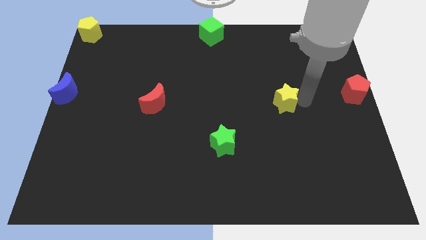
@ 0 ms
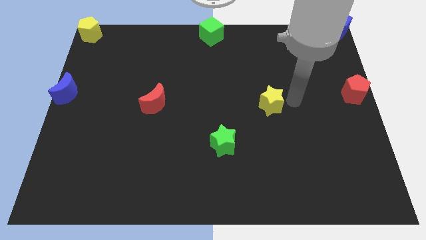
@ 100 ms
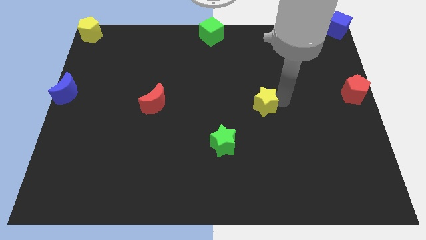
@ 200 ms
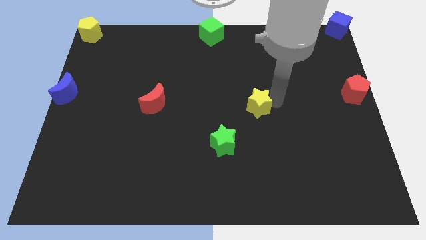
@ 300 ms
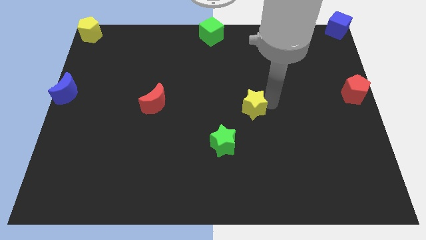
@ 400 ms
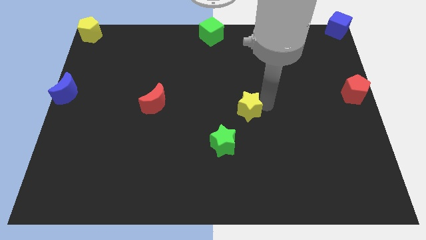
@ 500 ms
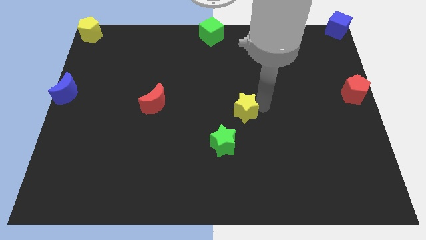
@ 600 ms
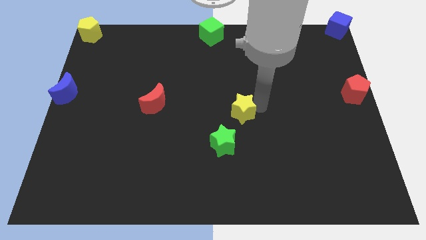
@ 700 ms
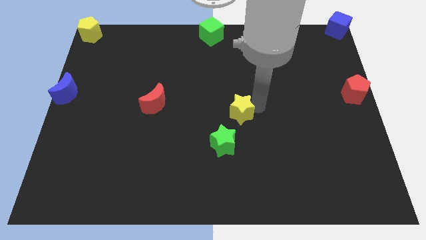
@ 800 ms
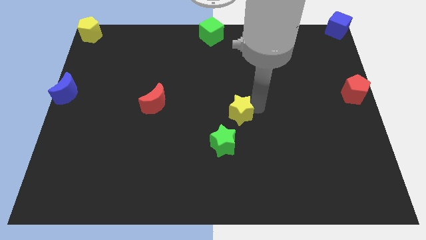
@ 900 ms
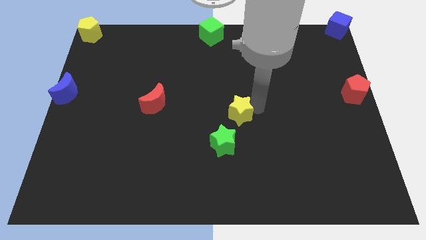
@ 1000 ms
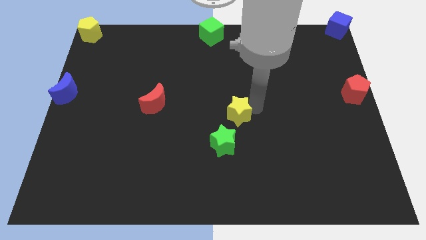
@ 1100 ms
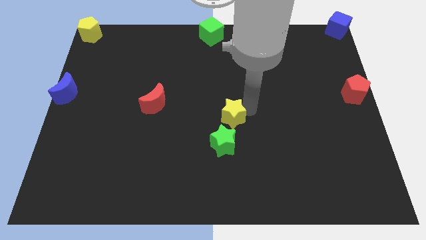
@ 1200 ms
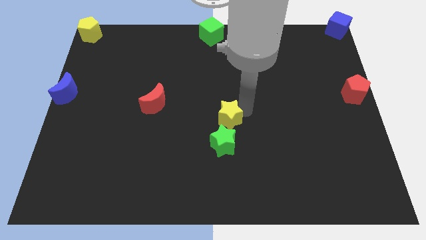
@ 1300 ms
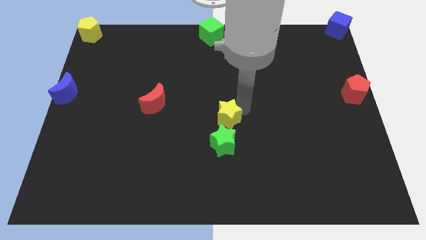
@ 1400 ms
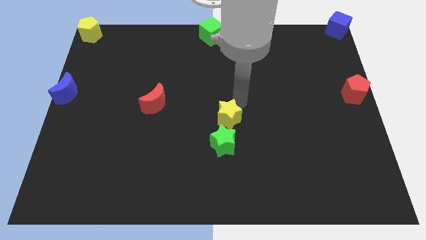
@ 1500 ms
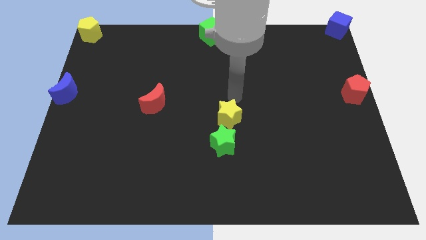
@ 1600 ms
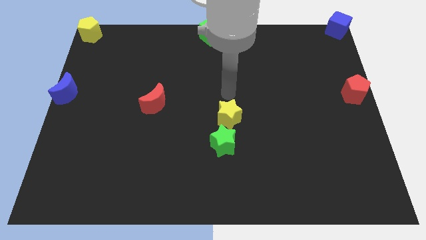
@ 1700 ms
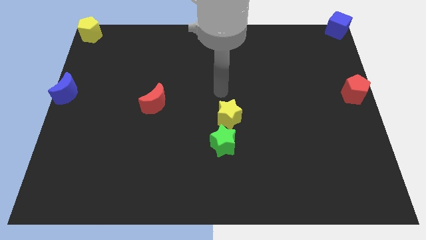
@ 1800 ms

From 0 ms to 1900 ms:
push the yellow star to the top right side of the green star

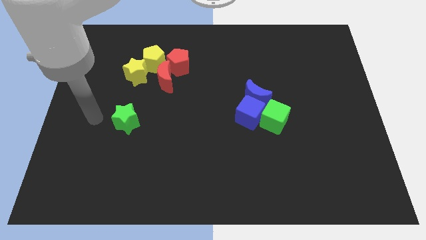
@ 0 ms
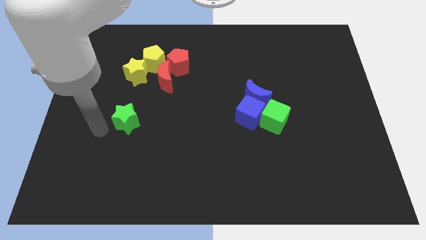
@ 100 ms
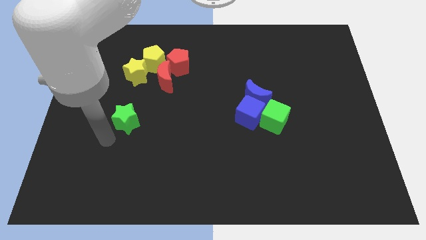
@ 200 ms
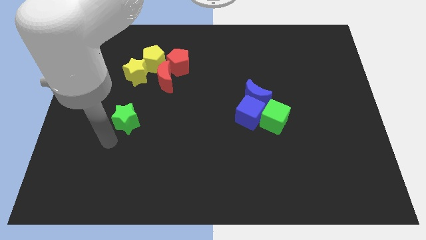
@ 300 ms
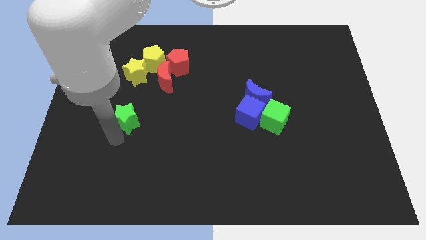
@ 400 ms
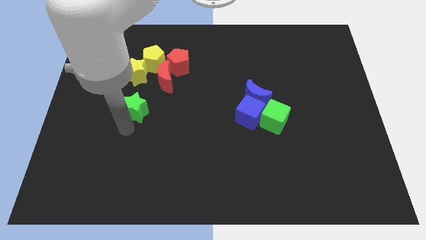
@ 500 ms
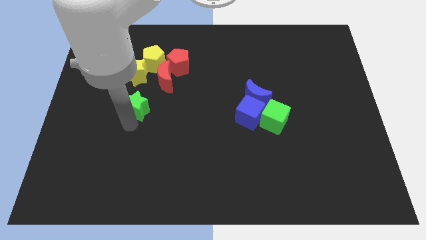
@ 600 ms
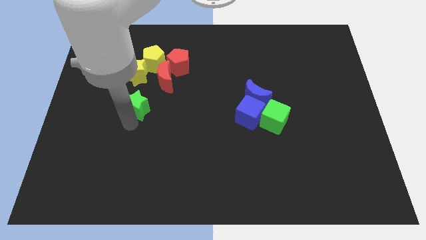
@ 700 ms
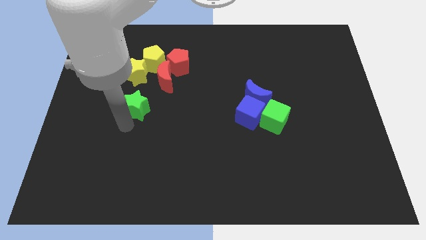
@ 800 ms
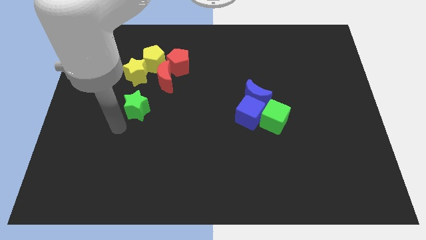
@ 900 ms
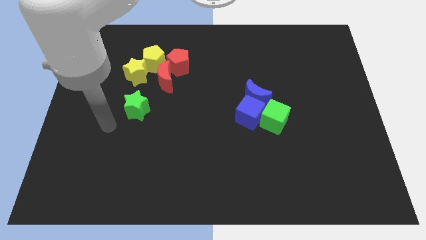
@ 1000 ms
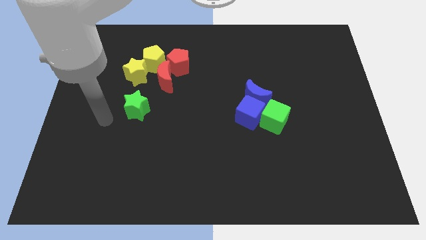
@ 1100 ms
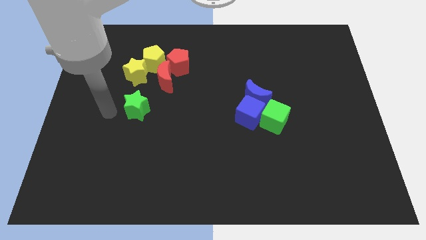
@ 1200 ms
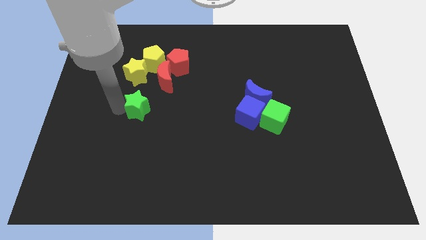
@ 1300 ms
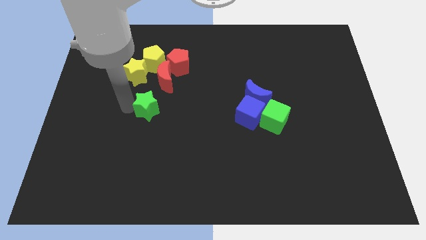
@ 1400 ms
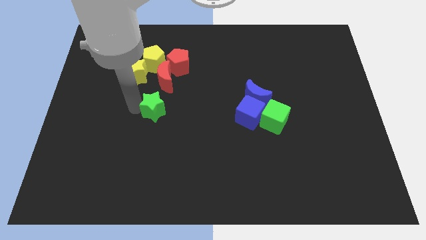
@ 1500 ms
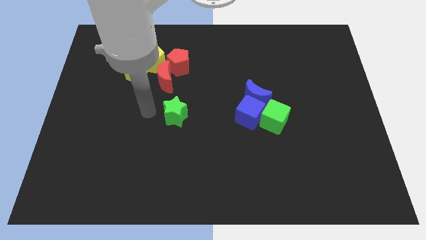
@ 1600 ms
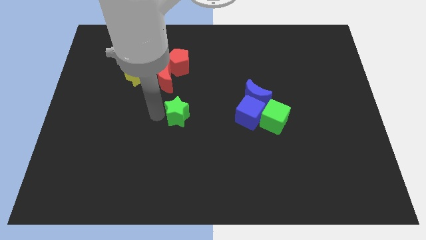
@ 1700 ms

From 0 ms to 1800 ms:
move the green star towards the blue cube

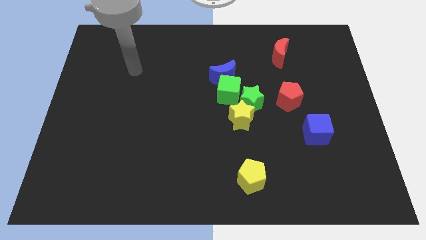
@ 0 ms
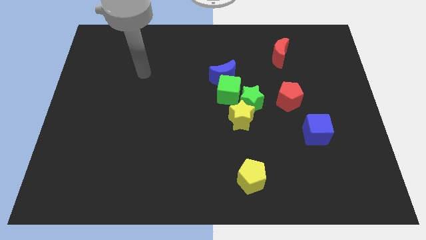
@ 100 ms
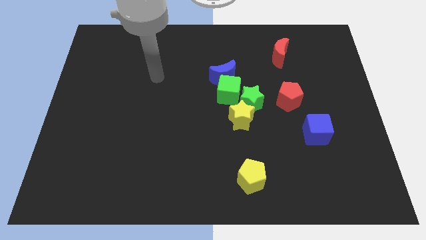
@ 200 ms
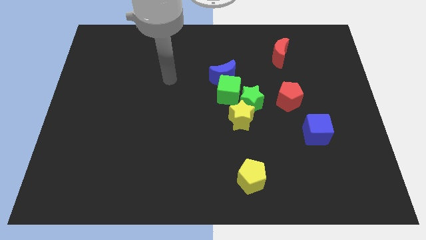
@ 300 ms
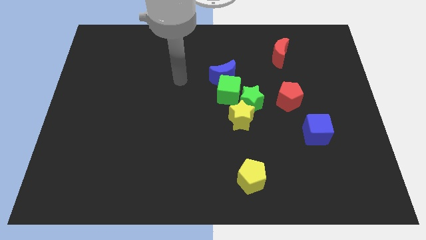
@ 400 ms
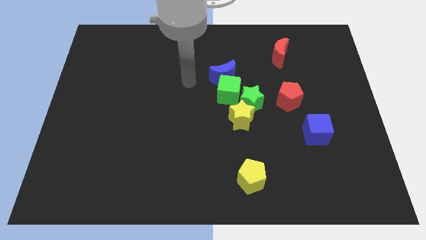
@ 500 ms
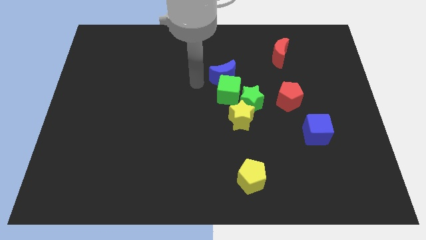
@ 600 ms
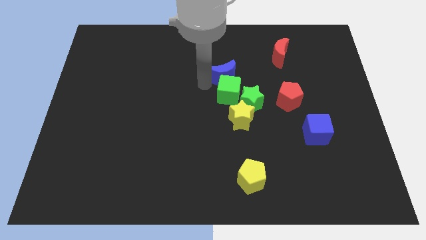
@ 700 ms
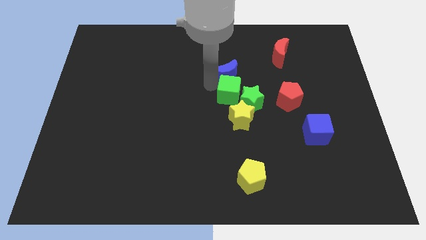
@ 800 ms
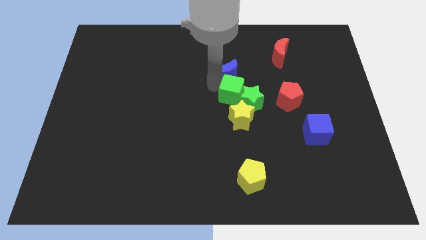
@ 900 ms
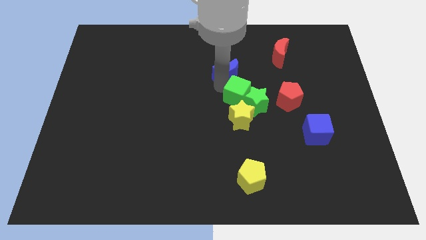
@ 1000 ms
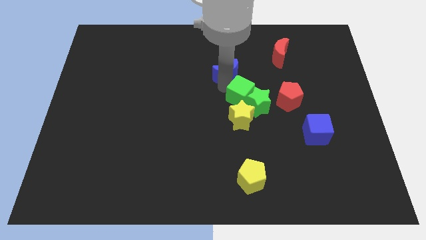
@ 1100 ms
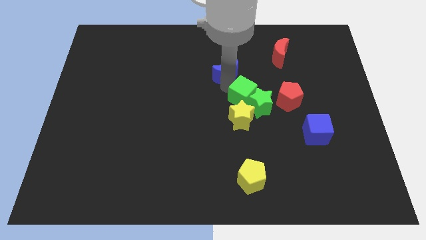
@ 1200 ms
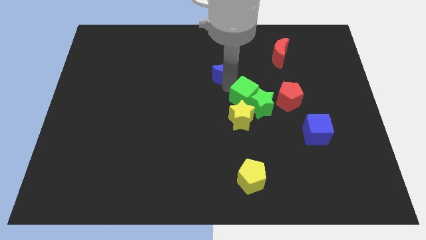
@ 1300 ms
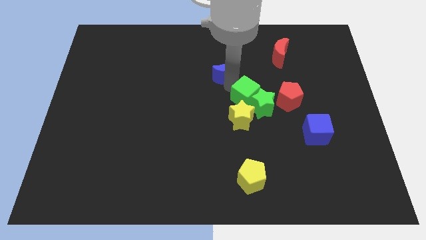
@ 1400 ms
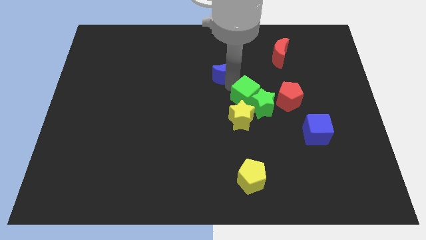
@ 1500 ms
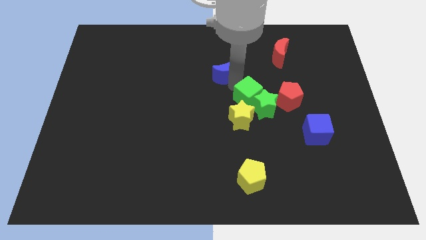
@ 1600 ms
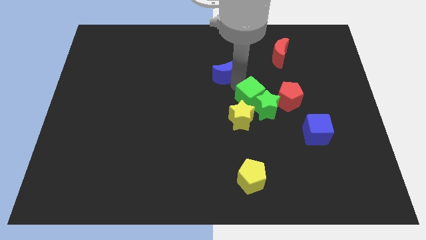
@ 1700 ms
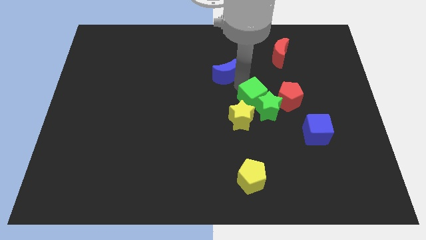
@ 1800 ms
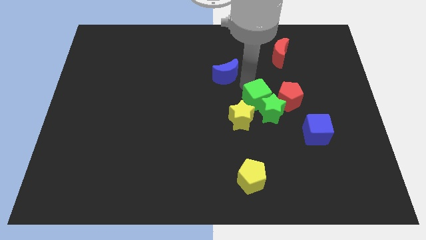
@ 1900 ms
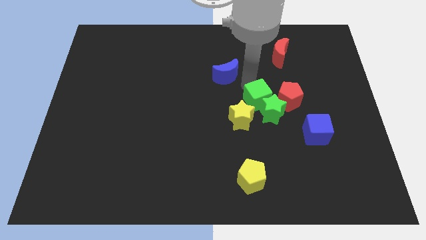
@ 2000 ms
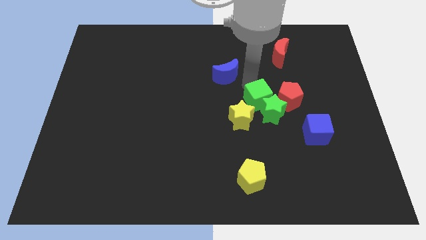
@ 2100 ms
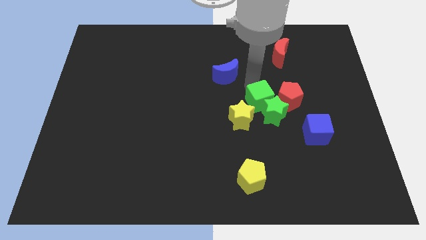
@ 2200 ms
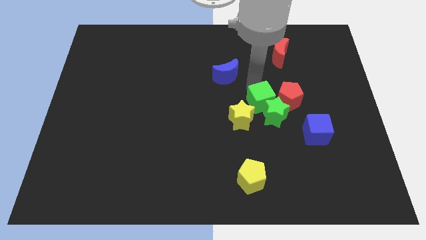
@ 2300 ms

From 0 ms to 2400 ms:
place green cube to the left of red pentagon

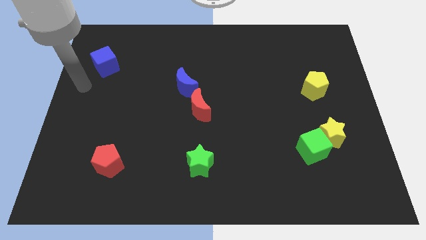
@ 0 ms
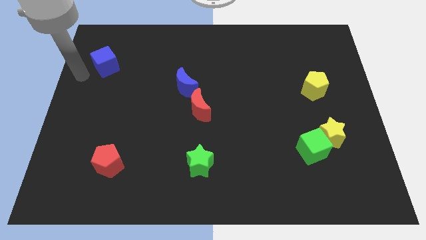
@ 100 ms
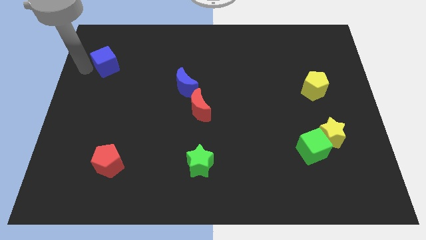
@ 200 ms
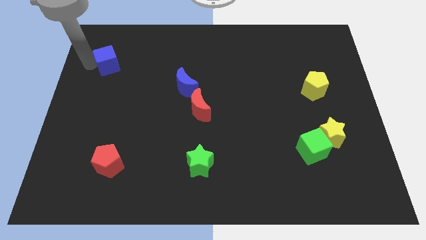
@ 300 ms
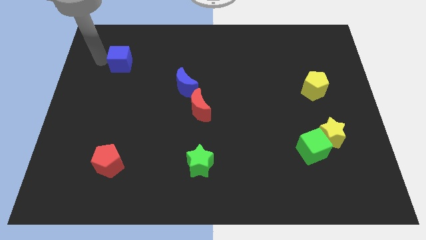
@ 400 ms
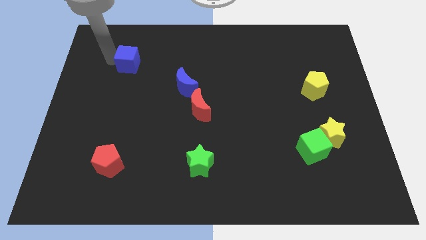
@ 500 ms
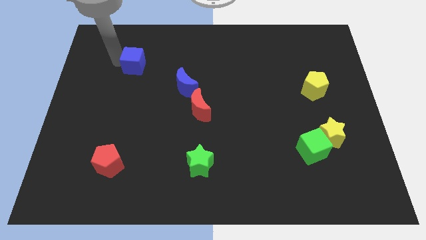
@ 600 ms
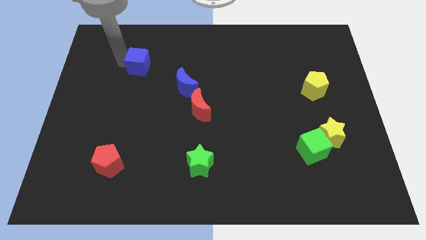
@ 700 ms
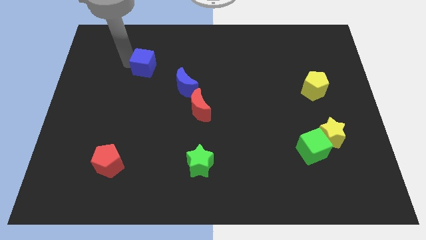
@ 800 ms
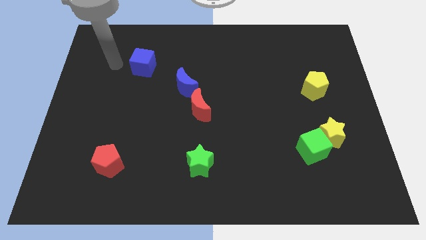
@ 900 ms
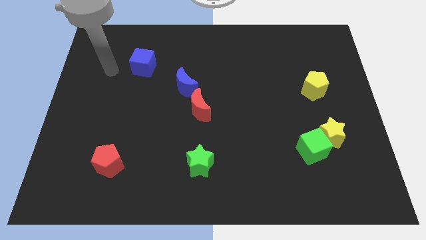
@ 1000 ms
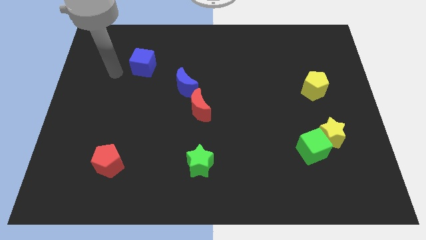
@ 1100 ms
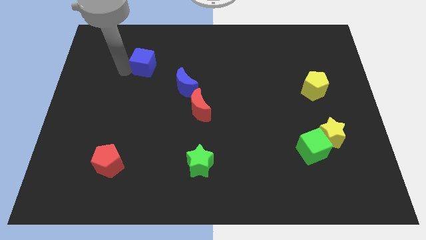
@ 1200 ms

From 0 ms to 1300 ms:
move blue cube towards blue moon

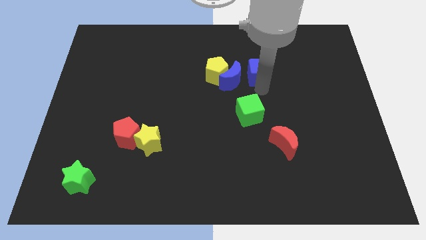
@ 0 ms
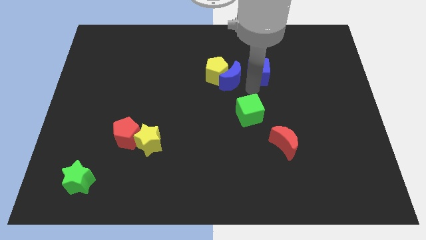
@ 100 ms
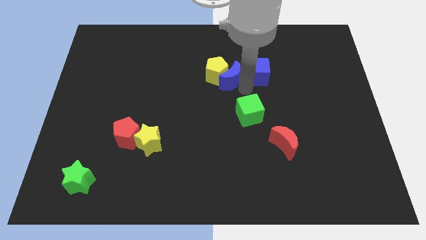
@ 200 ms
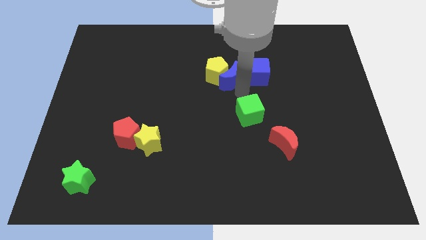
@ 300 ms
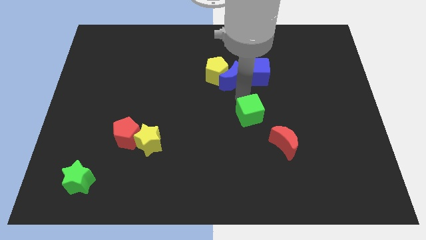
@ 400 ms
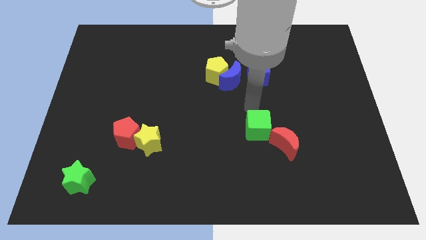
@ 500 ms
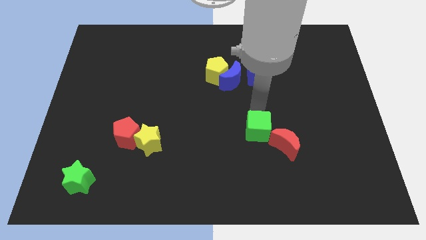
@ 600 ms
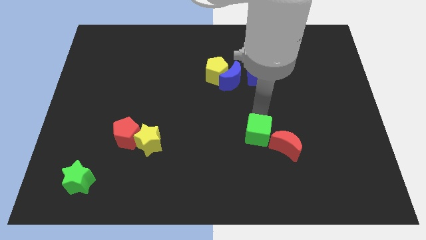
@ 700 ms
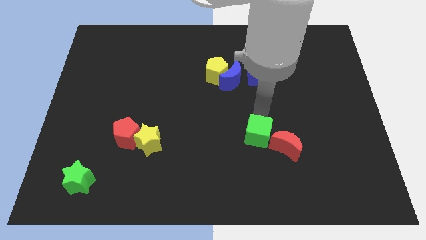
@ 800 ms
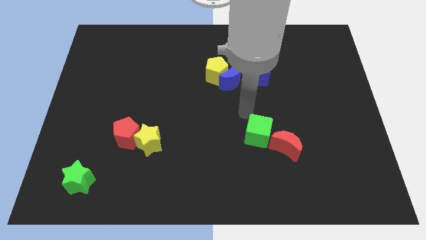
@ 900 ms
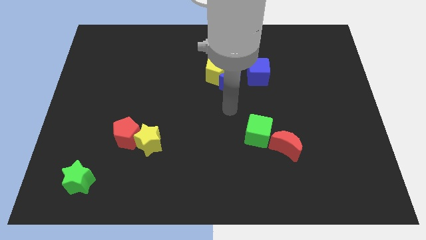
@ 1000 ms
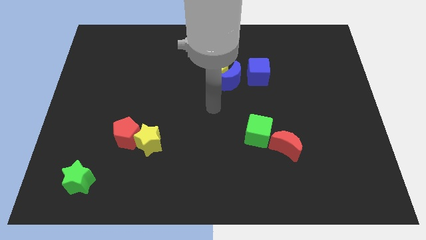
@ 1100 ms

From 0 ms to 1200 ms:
place the green cube towards the bottom side of the board

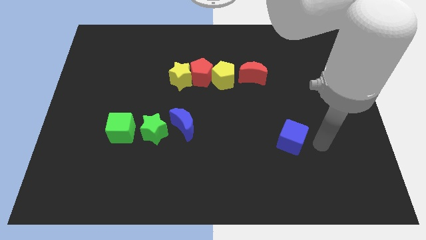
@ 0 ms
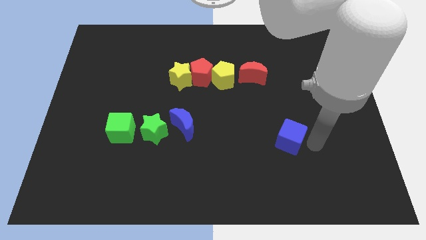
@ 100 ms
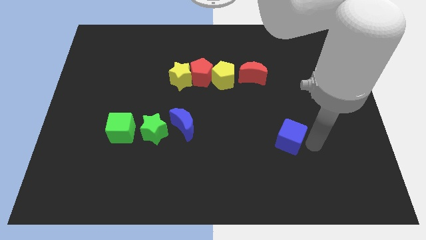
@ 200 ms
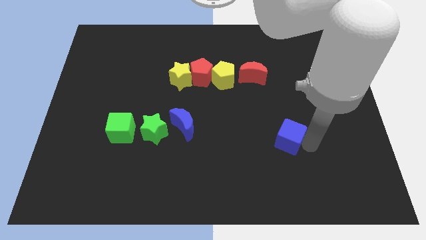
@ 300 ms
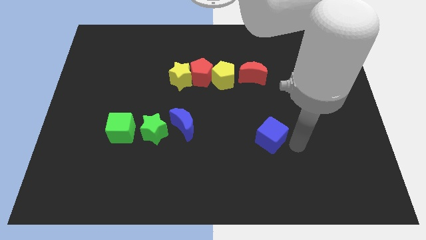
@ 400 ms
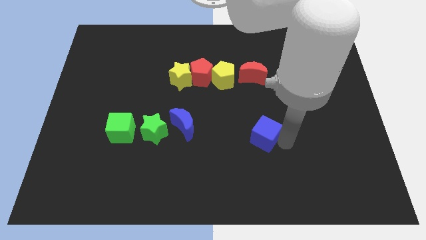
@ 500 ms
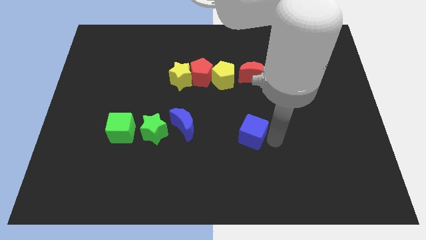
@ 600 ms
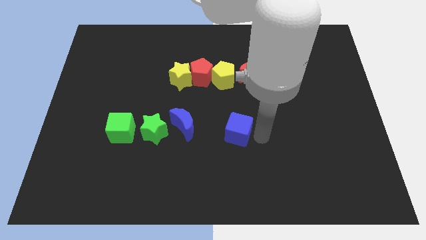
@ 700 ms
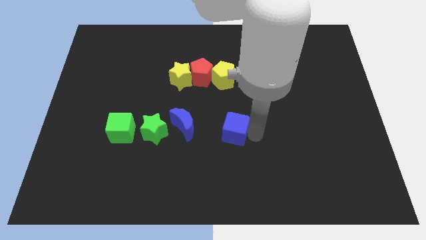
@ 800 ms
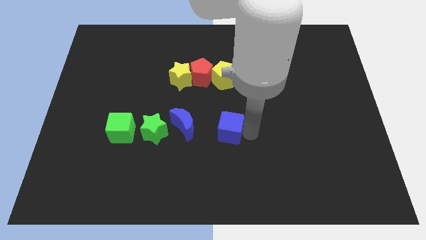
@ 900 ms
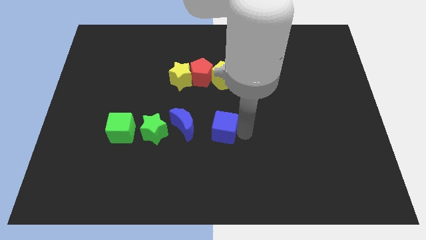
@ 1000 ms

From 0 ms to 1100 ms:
push the blue cube to the center of the board
